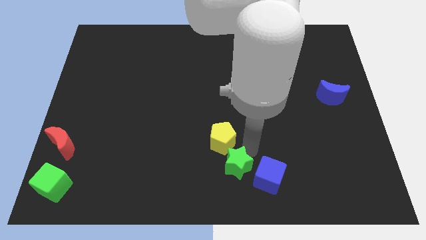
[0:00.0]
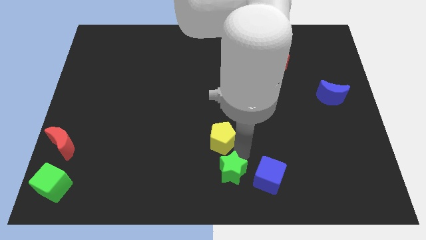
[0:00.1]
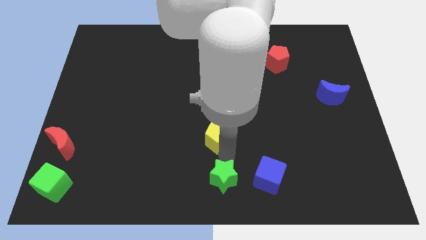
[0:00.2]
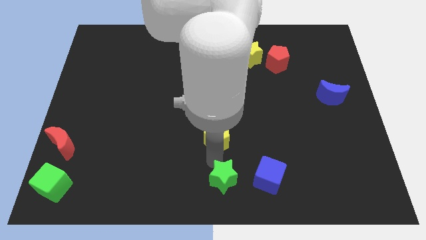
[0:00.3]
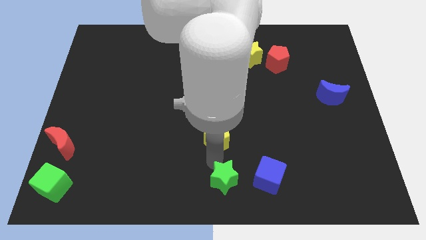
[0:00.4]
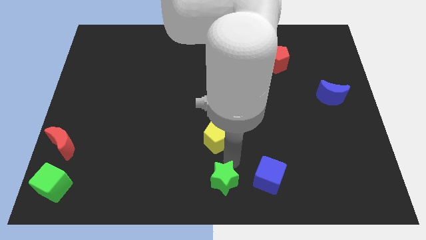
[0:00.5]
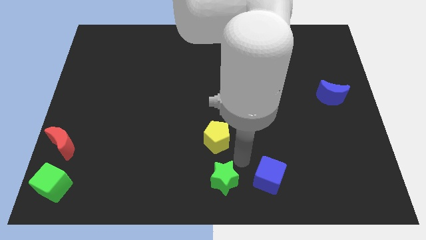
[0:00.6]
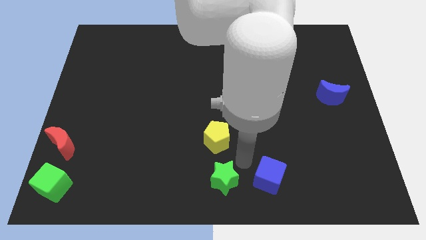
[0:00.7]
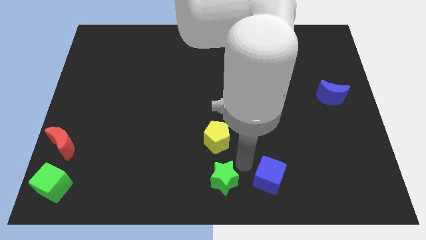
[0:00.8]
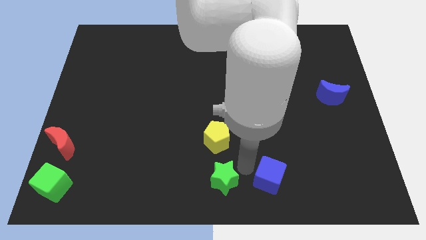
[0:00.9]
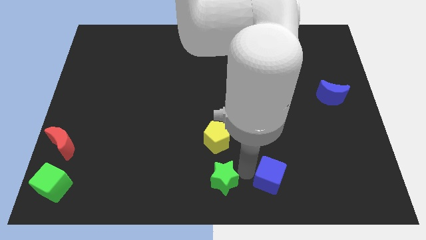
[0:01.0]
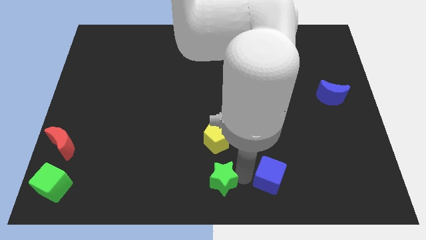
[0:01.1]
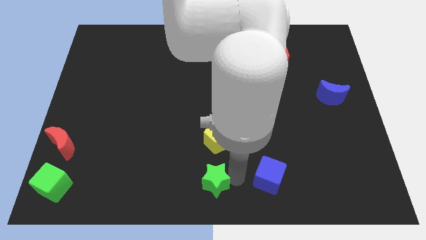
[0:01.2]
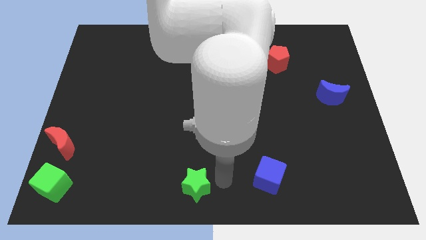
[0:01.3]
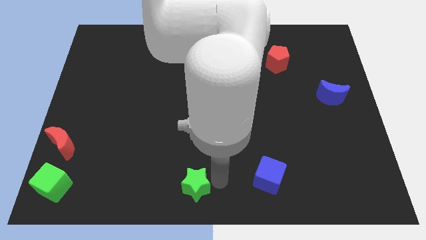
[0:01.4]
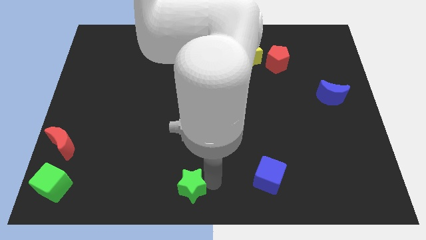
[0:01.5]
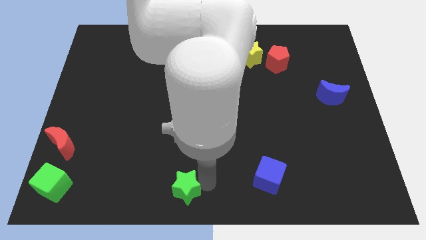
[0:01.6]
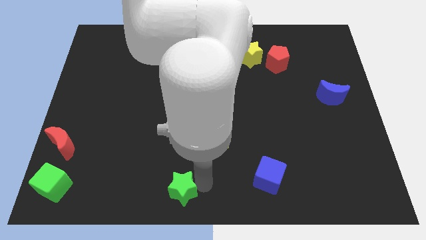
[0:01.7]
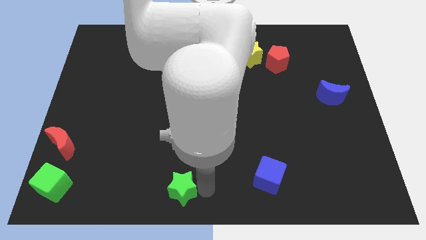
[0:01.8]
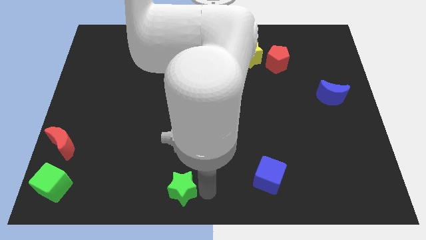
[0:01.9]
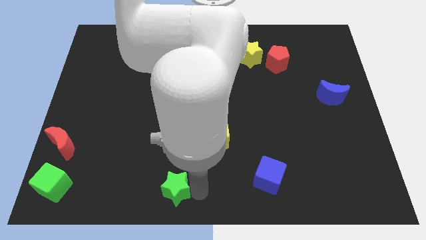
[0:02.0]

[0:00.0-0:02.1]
move the green star to the bottom center

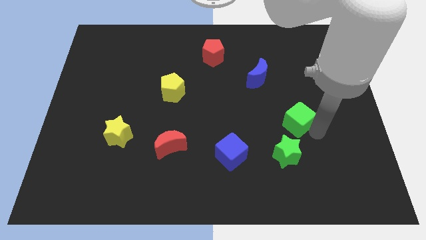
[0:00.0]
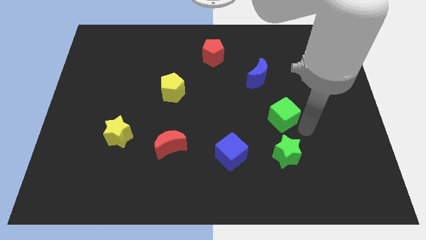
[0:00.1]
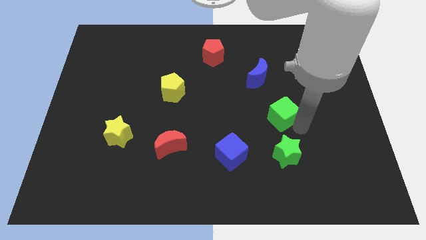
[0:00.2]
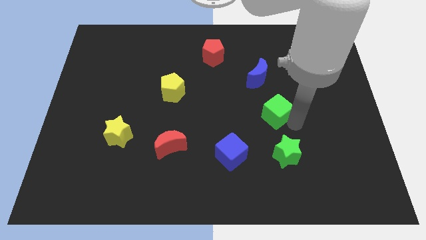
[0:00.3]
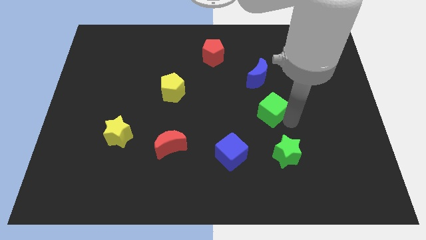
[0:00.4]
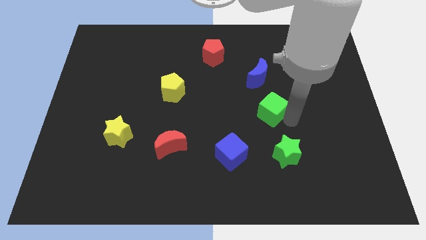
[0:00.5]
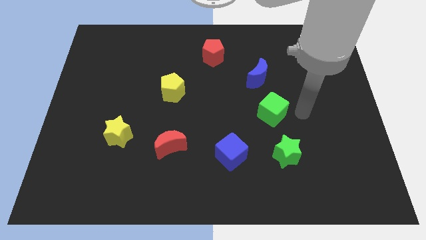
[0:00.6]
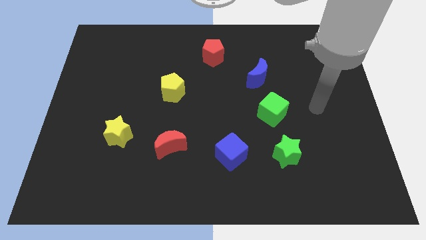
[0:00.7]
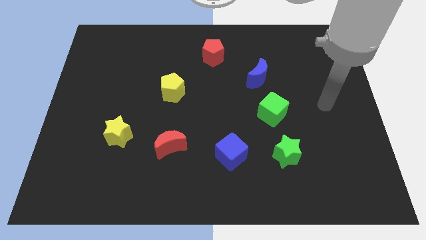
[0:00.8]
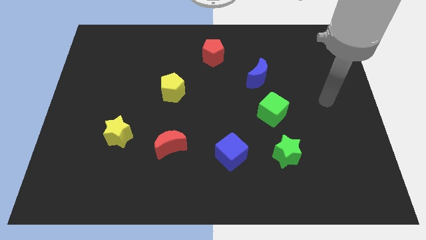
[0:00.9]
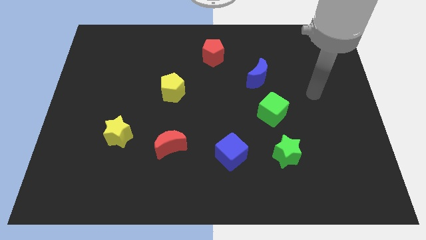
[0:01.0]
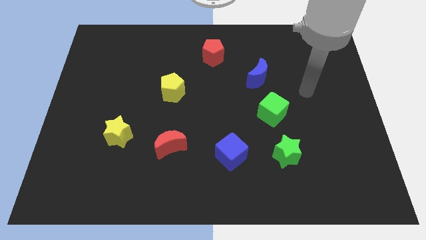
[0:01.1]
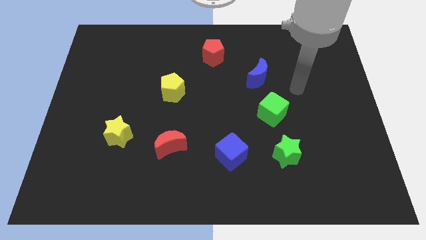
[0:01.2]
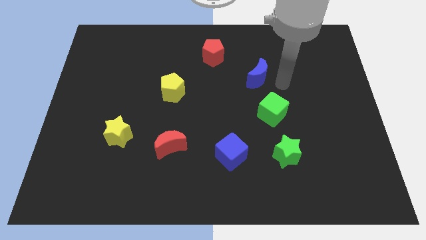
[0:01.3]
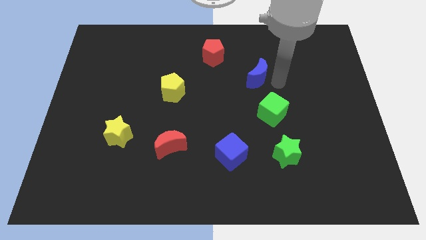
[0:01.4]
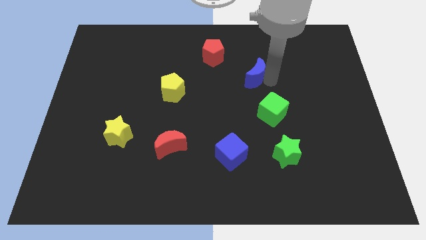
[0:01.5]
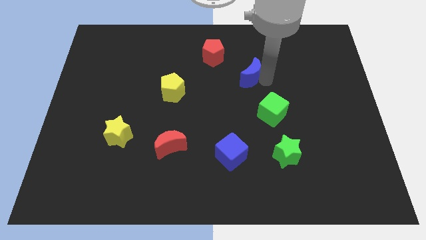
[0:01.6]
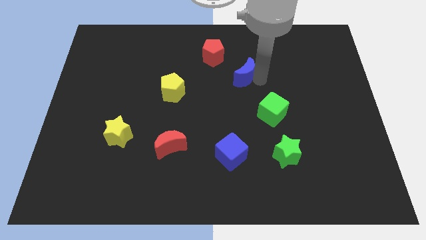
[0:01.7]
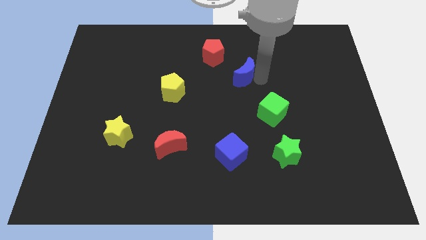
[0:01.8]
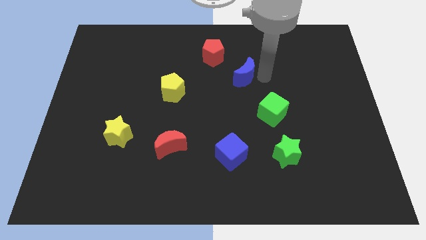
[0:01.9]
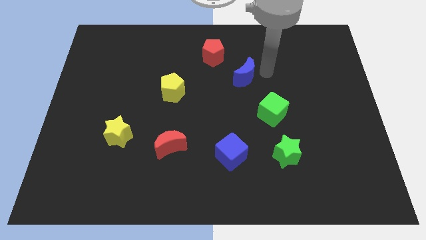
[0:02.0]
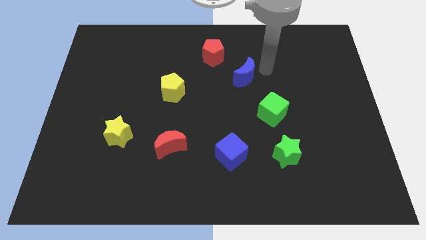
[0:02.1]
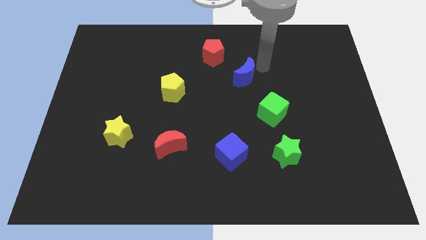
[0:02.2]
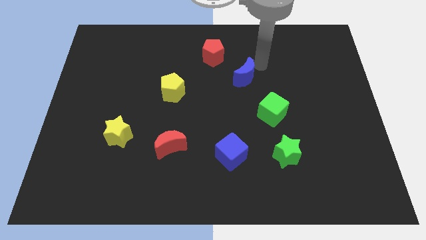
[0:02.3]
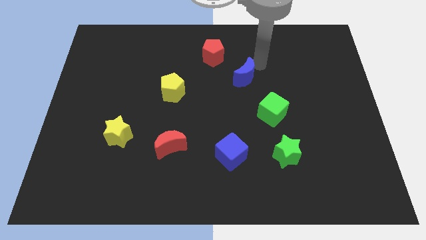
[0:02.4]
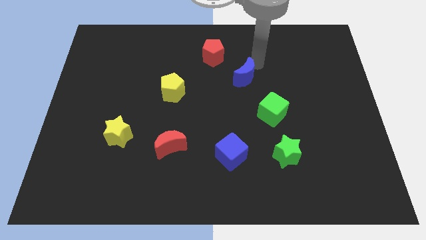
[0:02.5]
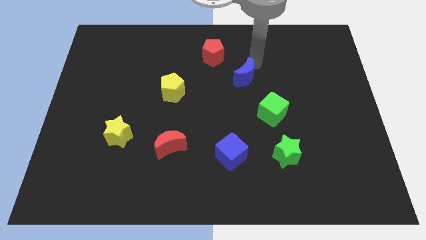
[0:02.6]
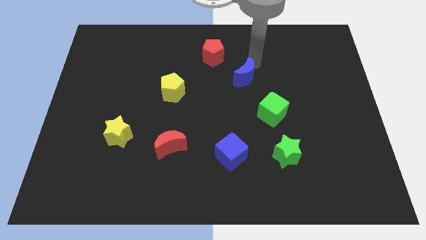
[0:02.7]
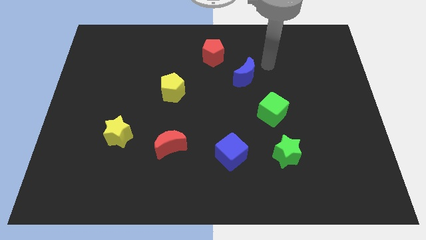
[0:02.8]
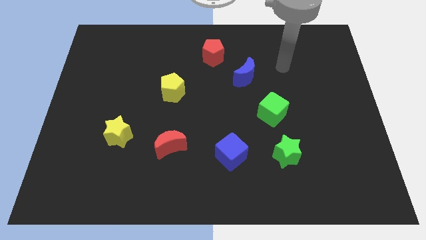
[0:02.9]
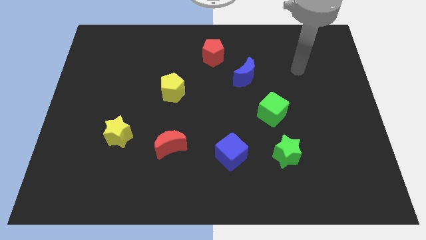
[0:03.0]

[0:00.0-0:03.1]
adjust the green cube and the blue boon to form a diagonal line

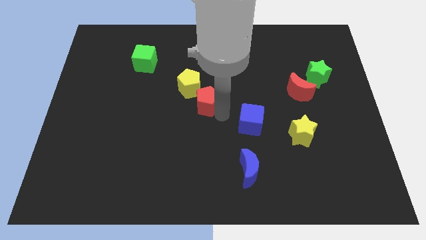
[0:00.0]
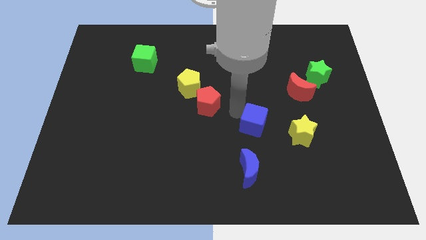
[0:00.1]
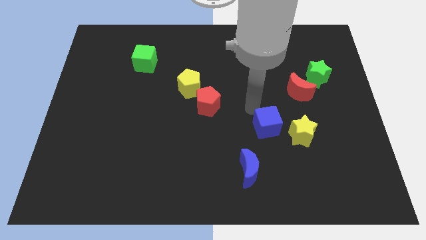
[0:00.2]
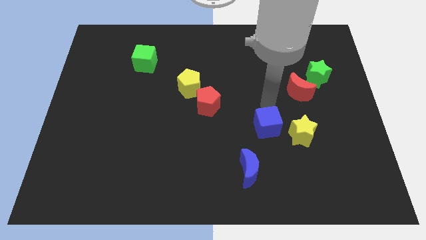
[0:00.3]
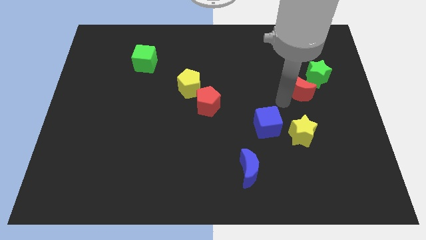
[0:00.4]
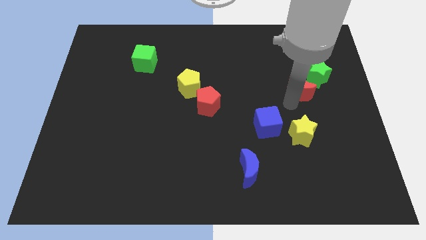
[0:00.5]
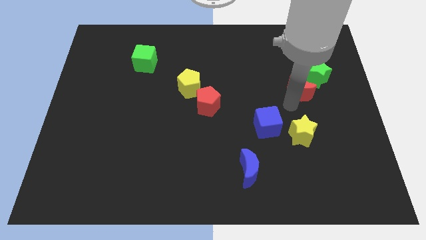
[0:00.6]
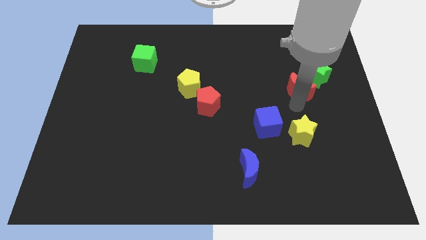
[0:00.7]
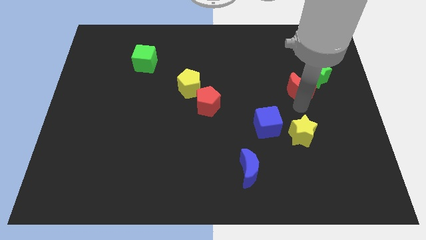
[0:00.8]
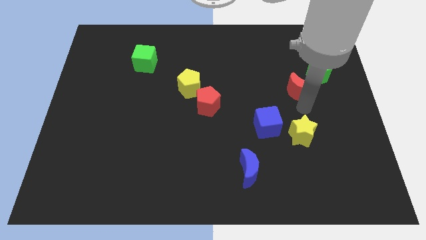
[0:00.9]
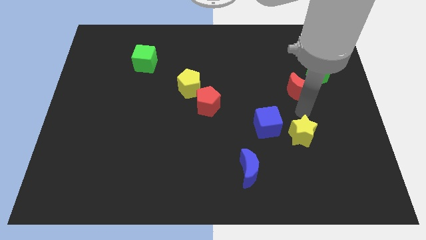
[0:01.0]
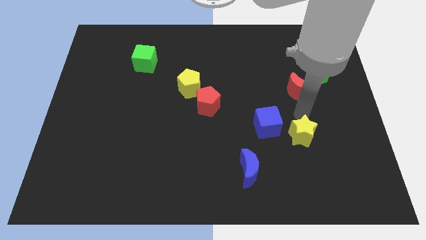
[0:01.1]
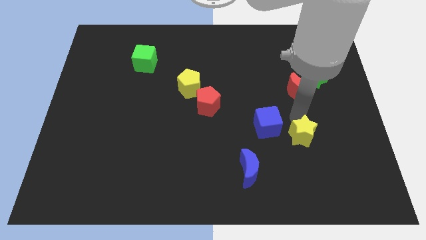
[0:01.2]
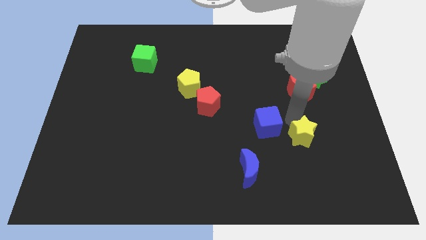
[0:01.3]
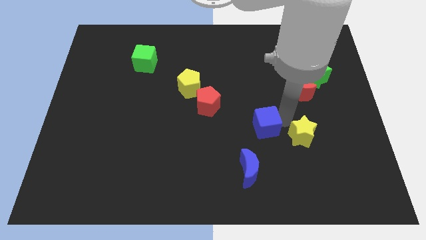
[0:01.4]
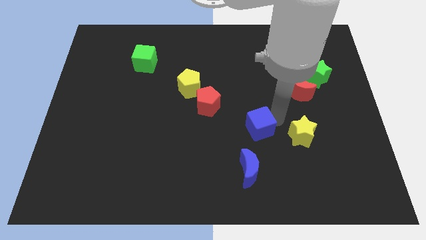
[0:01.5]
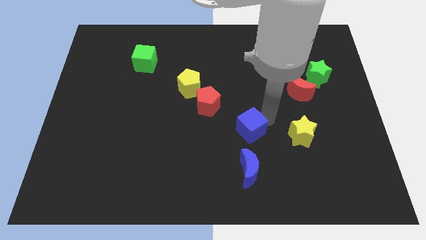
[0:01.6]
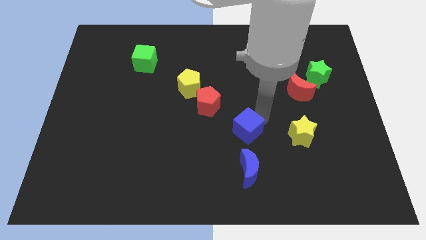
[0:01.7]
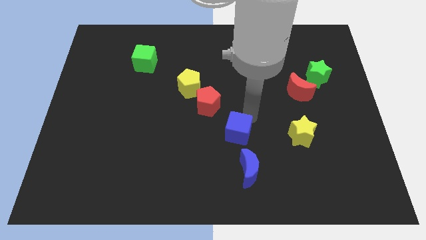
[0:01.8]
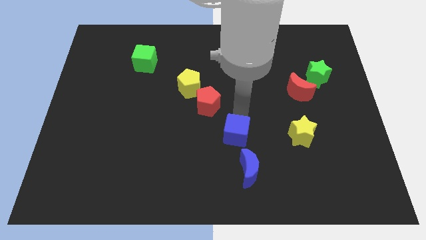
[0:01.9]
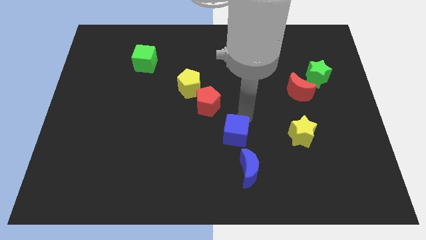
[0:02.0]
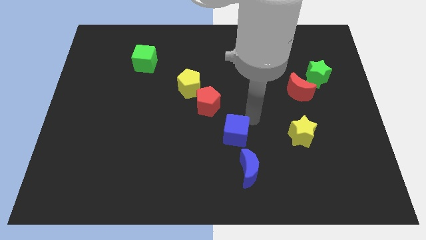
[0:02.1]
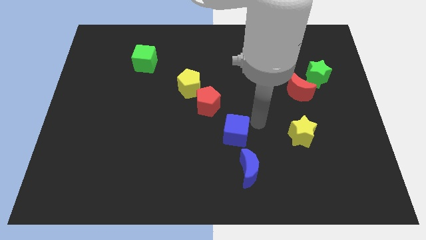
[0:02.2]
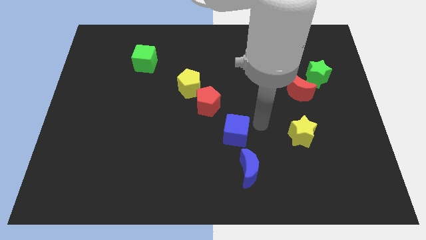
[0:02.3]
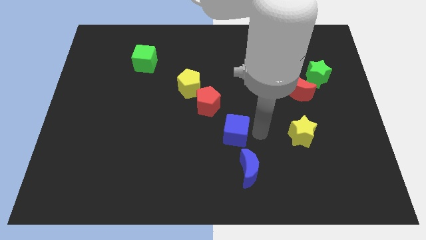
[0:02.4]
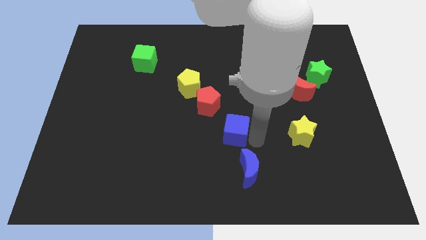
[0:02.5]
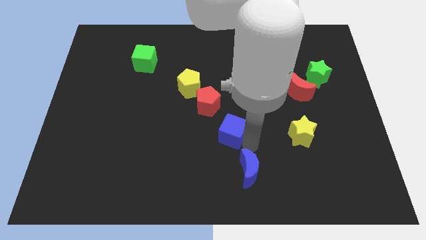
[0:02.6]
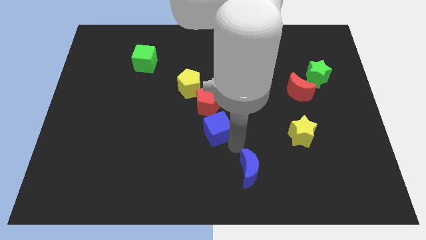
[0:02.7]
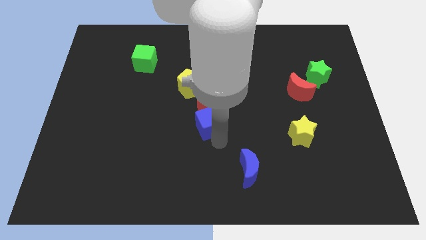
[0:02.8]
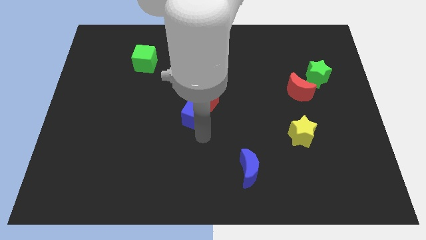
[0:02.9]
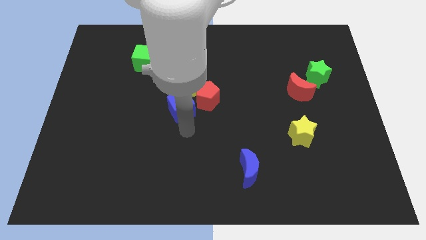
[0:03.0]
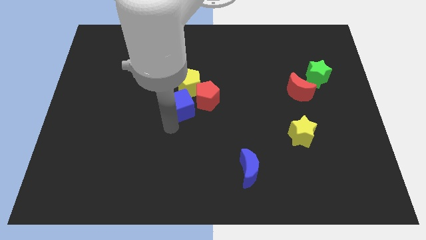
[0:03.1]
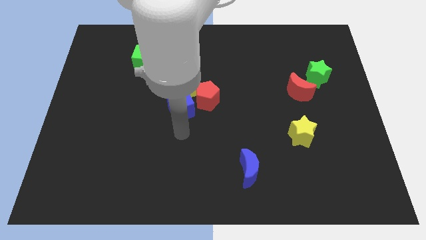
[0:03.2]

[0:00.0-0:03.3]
move the blue cube below red pentagon

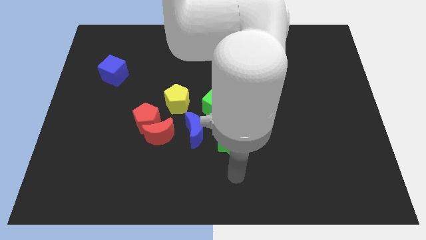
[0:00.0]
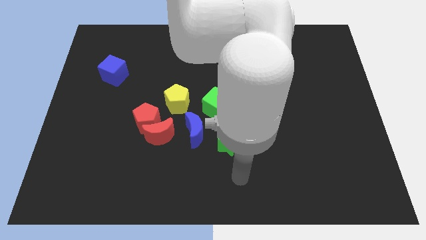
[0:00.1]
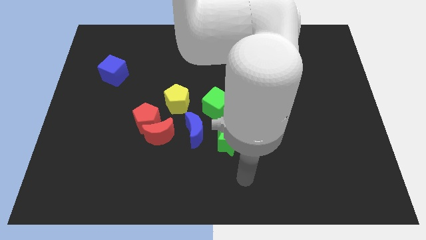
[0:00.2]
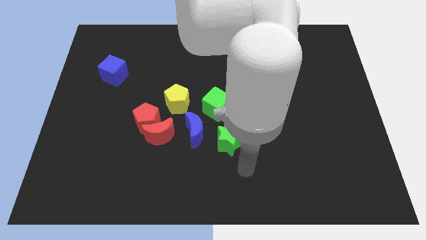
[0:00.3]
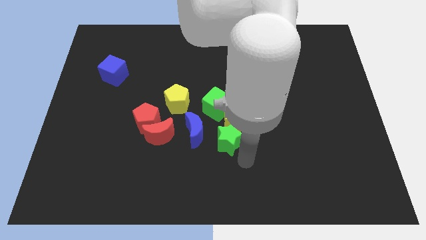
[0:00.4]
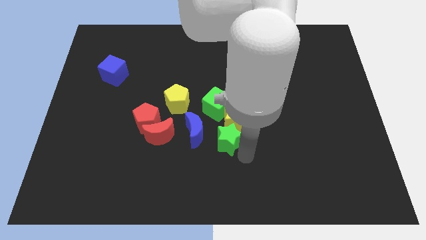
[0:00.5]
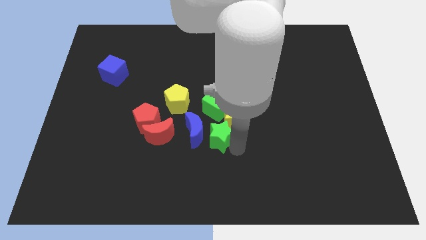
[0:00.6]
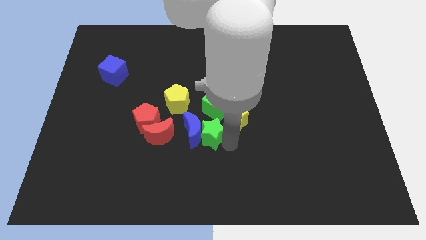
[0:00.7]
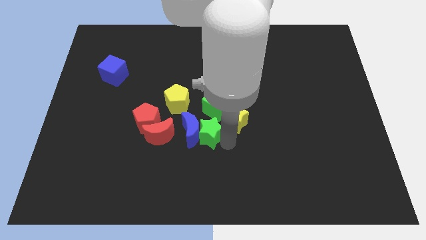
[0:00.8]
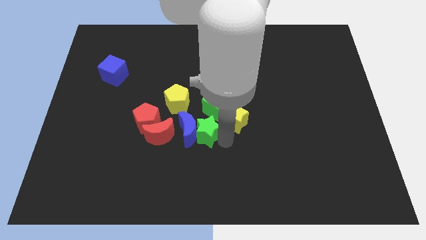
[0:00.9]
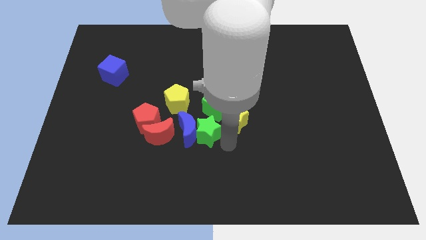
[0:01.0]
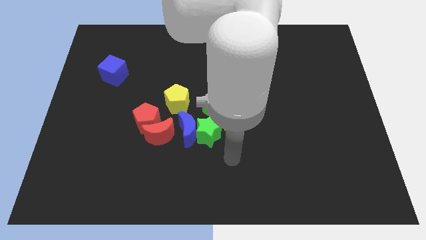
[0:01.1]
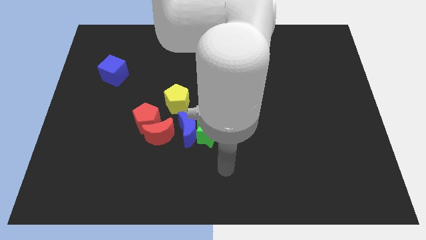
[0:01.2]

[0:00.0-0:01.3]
move green star to the right side of the blue mooon
